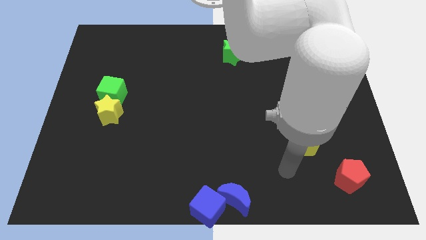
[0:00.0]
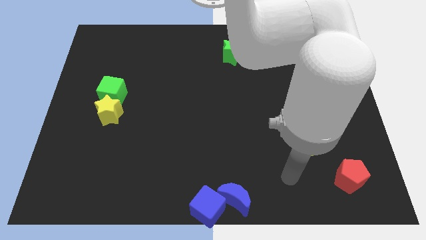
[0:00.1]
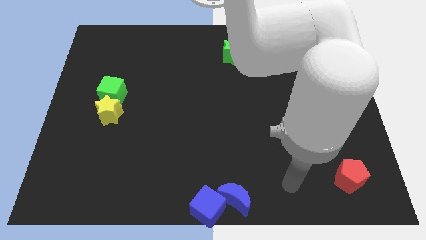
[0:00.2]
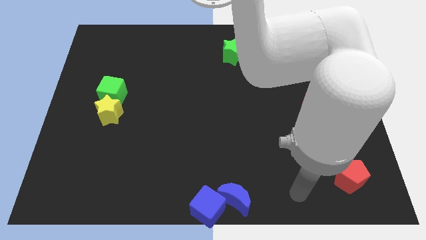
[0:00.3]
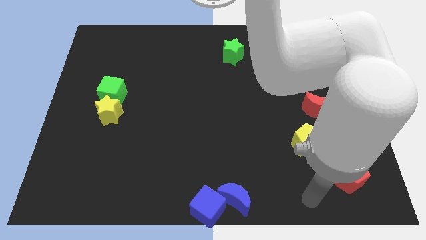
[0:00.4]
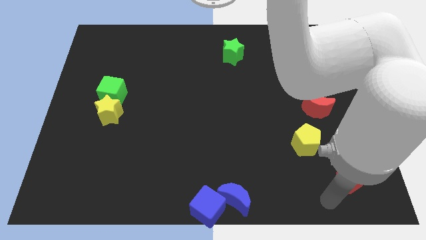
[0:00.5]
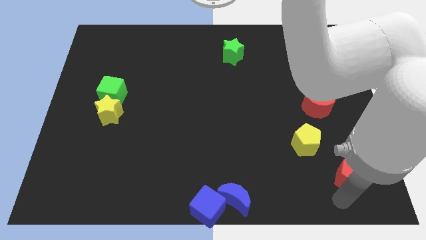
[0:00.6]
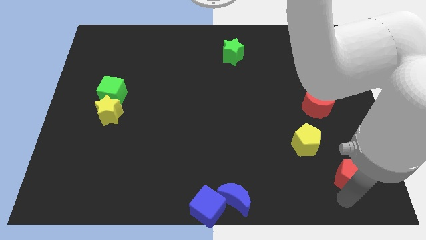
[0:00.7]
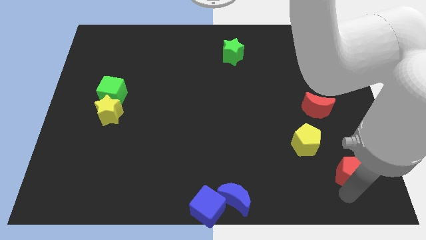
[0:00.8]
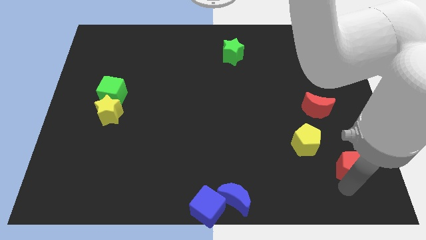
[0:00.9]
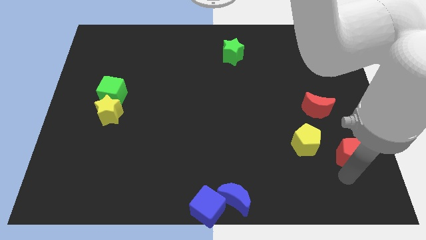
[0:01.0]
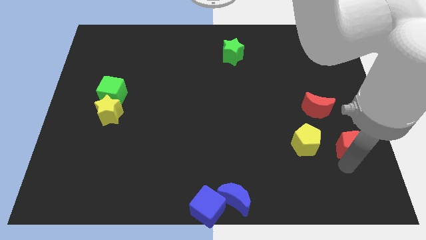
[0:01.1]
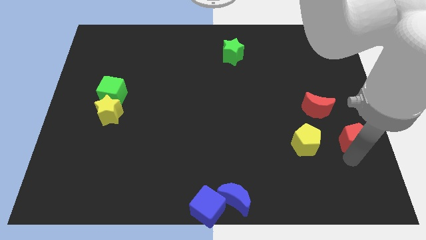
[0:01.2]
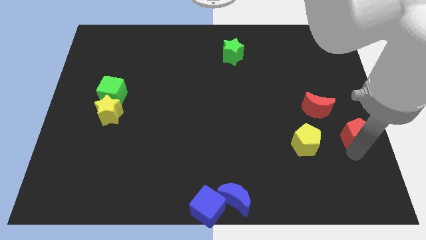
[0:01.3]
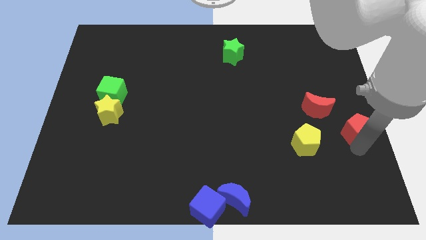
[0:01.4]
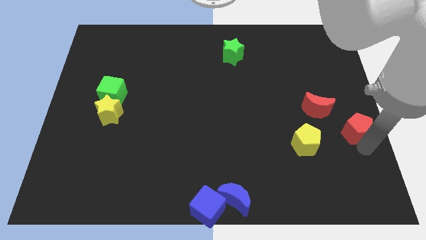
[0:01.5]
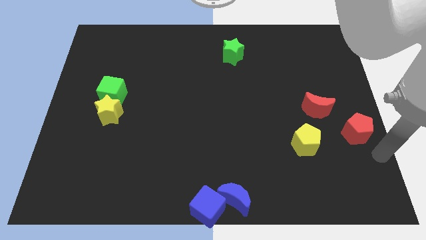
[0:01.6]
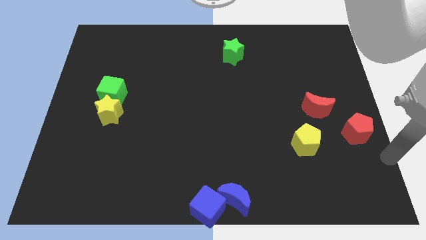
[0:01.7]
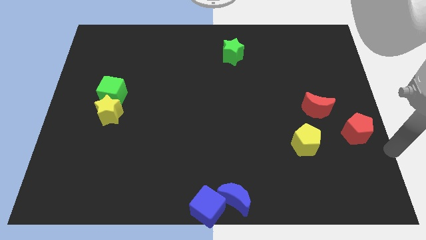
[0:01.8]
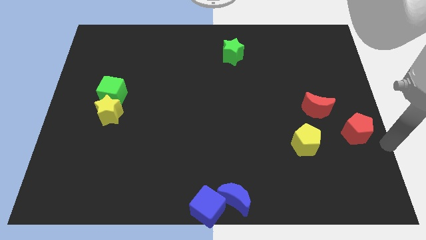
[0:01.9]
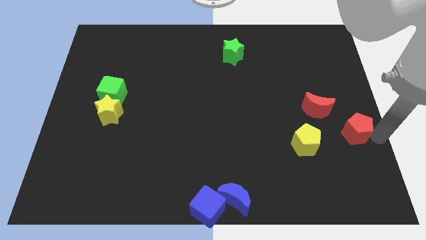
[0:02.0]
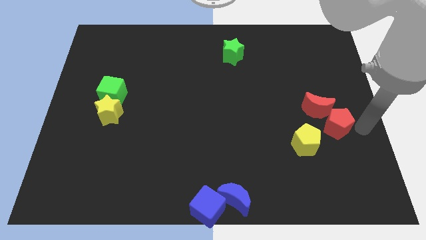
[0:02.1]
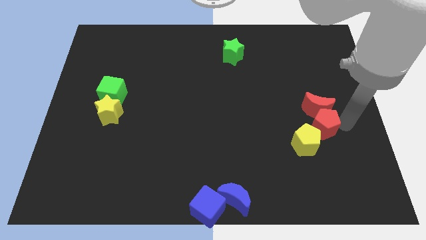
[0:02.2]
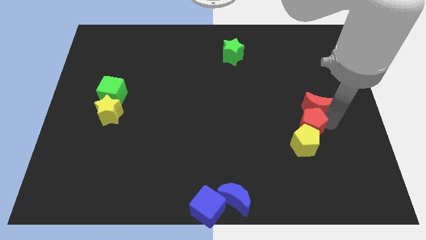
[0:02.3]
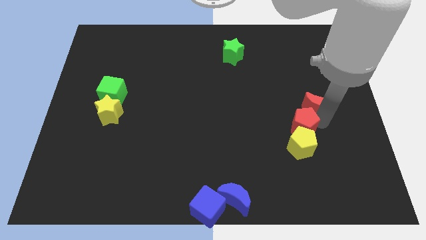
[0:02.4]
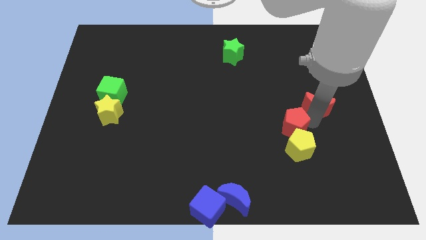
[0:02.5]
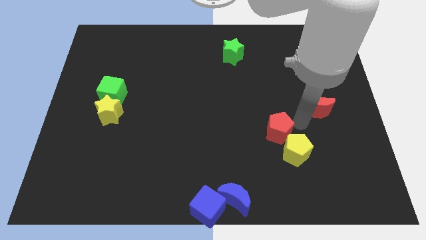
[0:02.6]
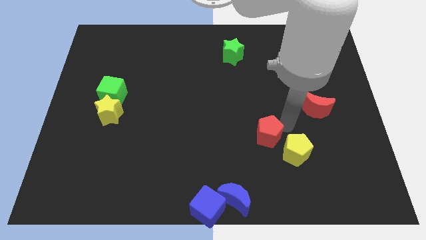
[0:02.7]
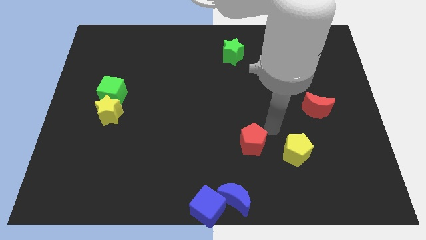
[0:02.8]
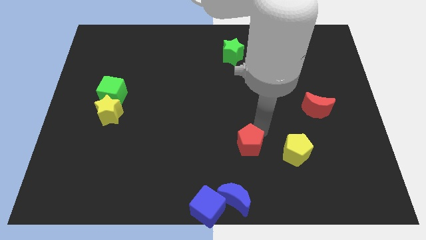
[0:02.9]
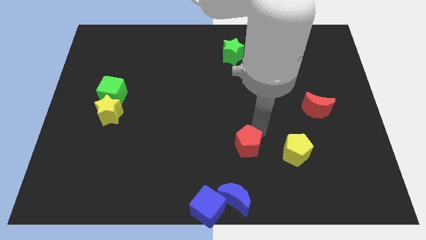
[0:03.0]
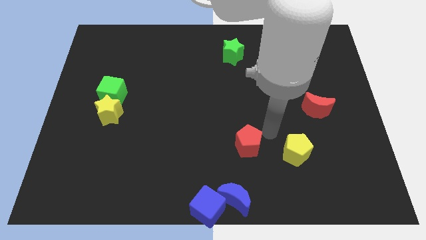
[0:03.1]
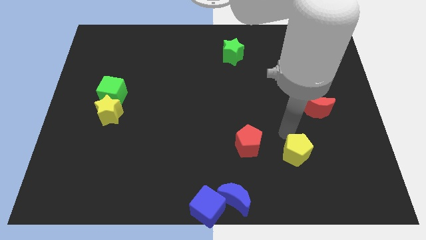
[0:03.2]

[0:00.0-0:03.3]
move the red pentagon to the left of the yellow pentagon

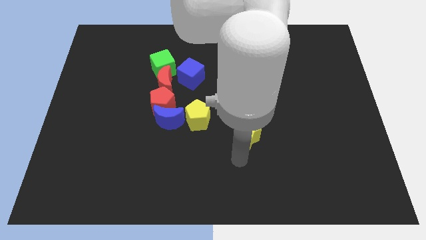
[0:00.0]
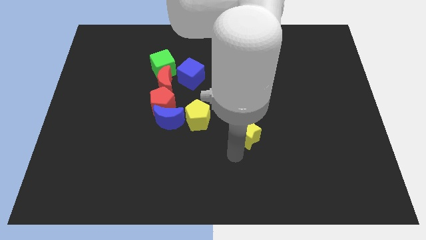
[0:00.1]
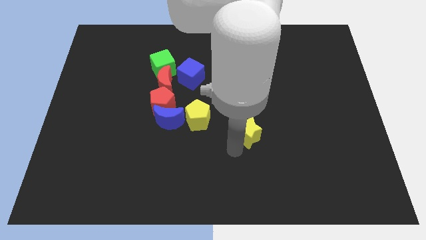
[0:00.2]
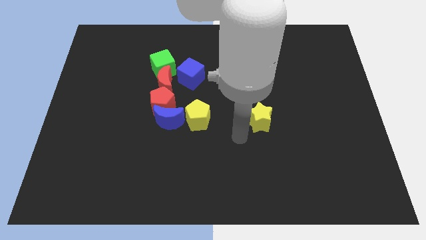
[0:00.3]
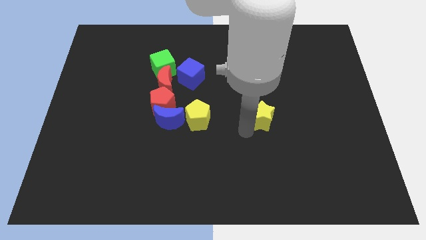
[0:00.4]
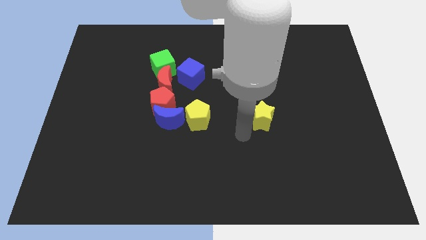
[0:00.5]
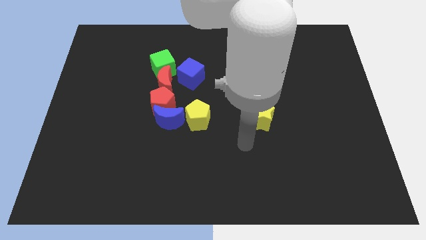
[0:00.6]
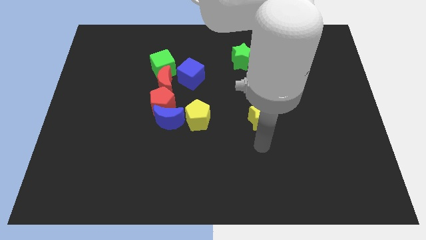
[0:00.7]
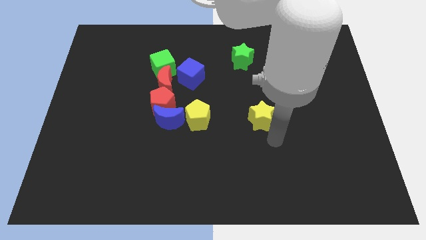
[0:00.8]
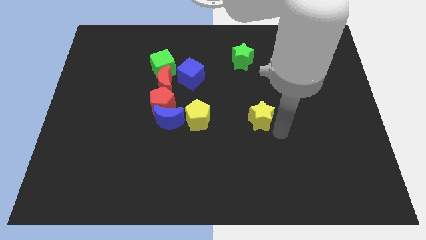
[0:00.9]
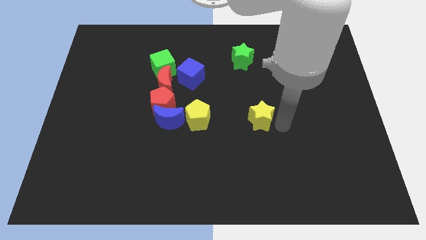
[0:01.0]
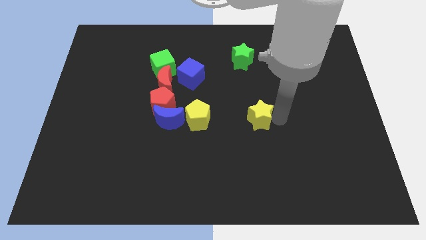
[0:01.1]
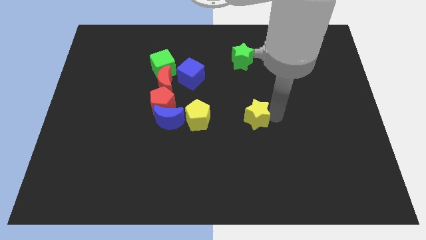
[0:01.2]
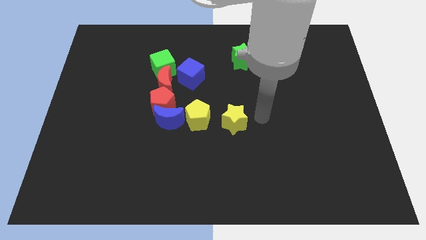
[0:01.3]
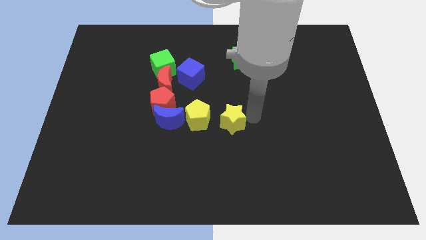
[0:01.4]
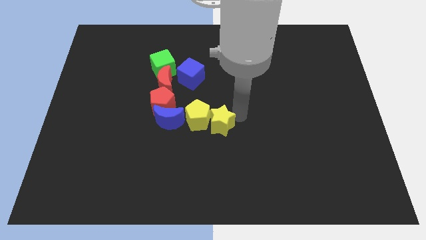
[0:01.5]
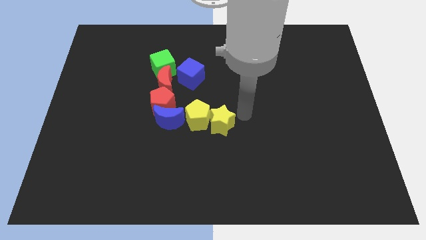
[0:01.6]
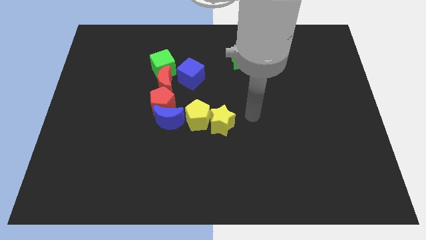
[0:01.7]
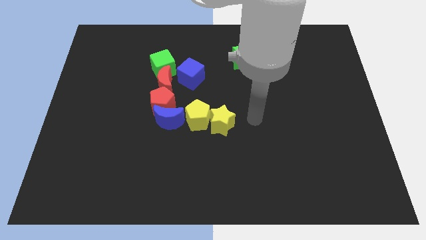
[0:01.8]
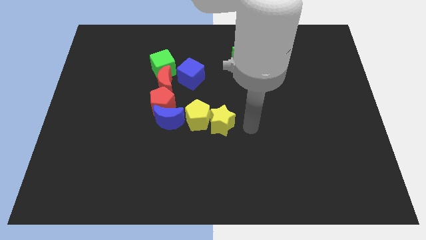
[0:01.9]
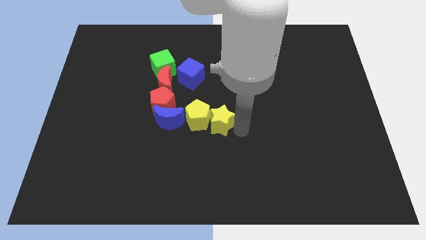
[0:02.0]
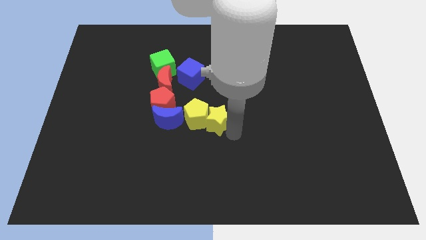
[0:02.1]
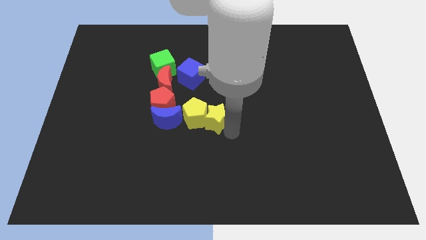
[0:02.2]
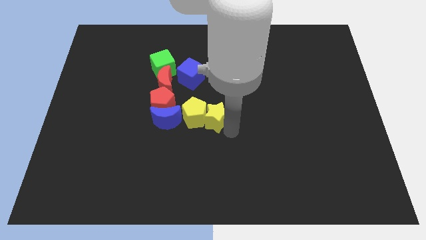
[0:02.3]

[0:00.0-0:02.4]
put yellow blocks together

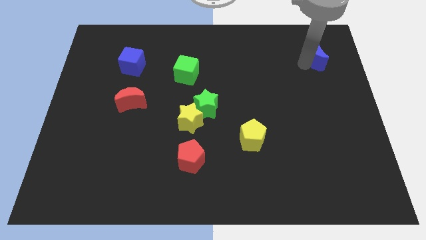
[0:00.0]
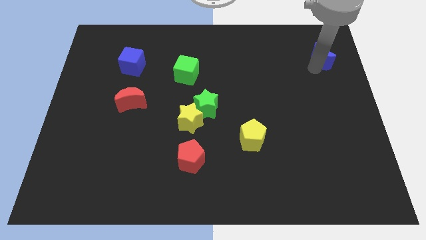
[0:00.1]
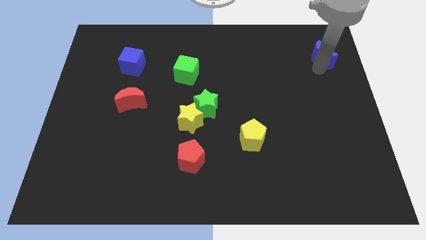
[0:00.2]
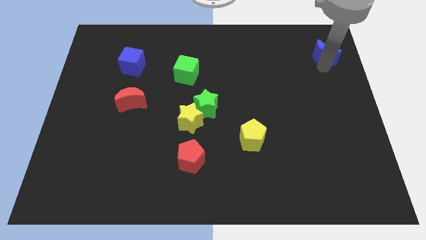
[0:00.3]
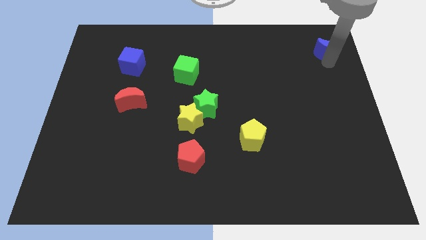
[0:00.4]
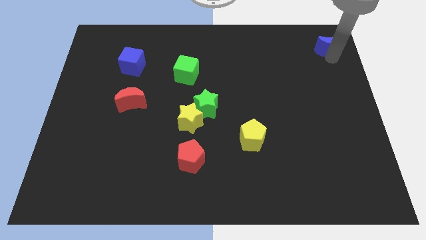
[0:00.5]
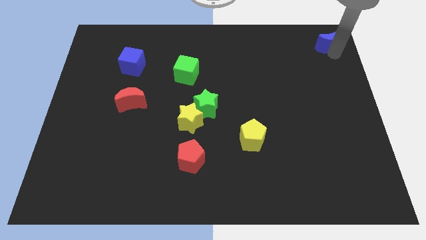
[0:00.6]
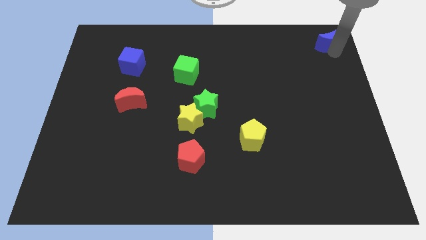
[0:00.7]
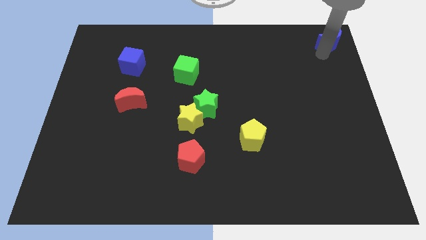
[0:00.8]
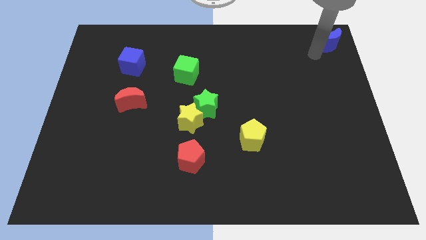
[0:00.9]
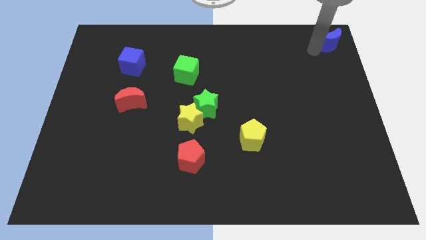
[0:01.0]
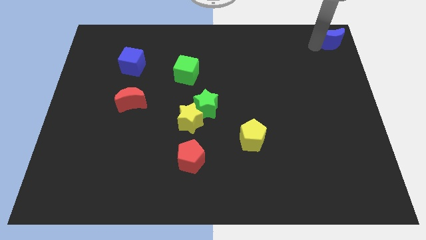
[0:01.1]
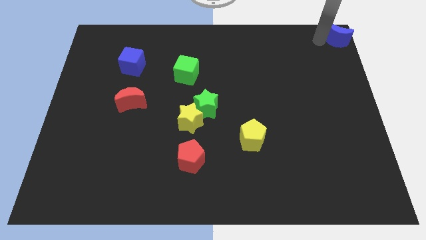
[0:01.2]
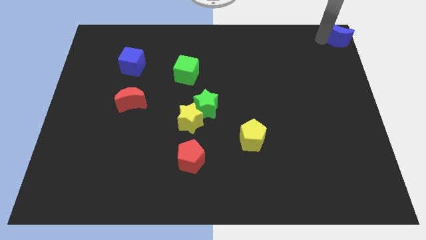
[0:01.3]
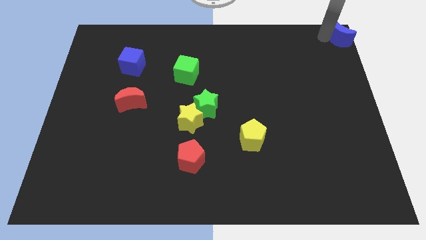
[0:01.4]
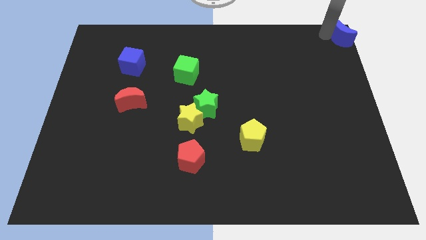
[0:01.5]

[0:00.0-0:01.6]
push the blue moon to the bottom right

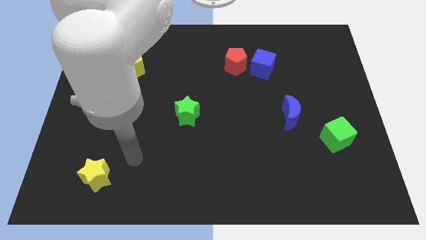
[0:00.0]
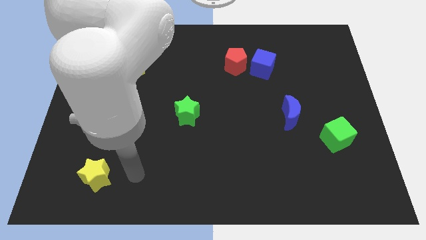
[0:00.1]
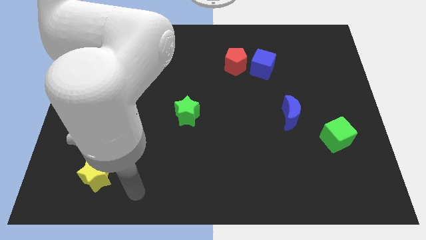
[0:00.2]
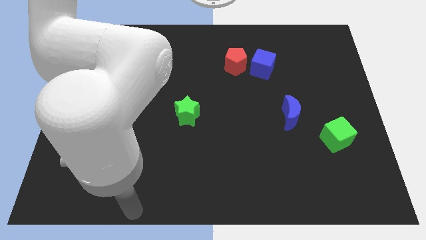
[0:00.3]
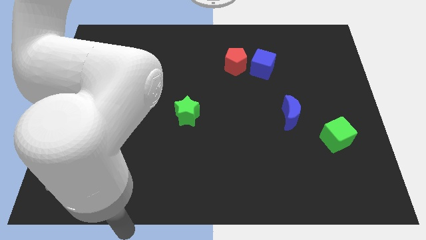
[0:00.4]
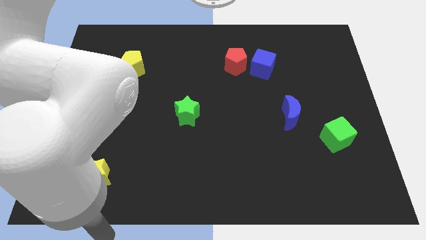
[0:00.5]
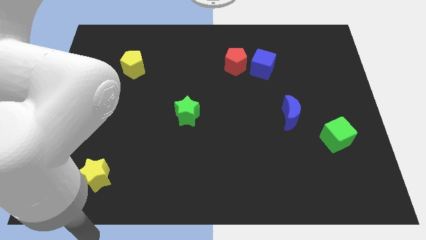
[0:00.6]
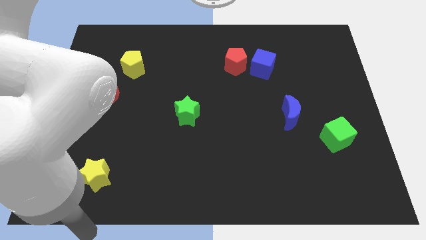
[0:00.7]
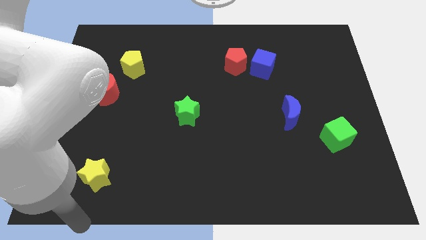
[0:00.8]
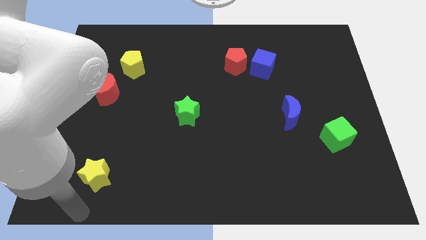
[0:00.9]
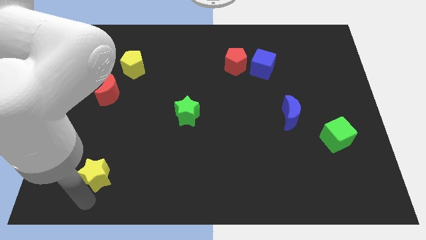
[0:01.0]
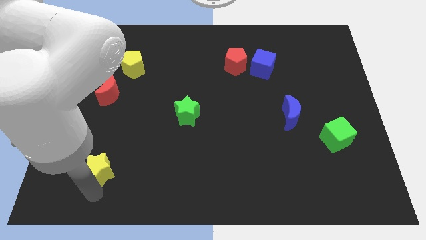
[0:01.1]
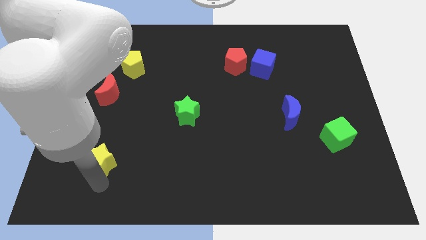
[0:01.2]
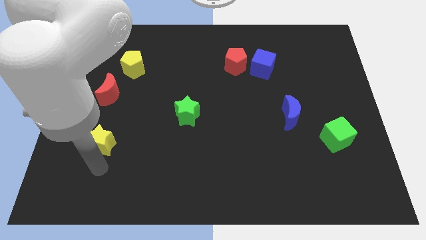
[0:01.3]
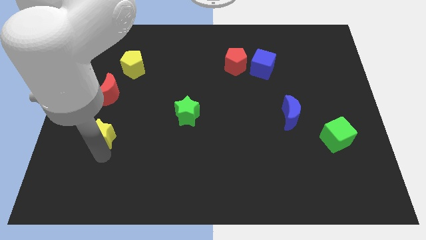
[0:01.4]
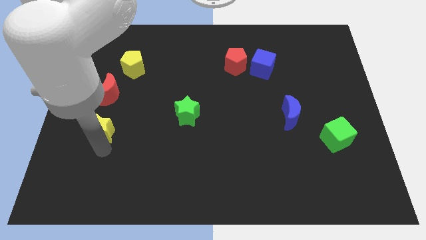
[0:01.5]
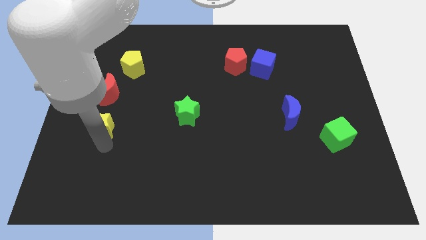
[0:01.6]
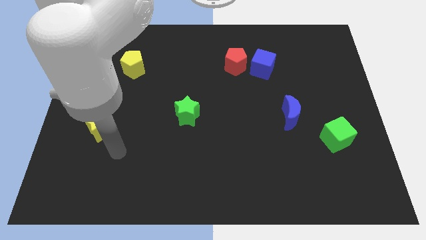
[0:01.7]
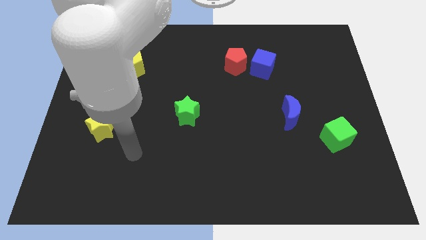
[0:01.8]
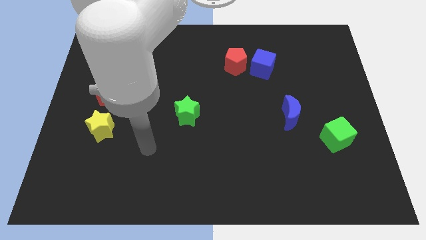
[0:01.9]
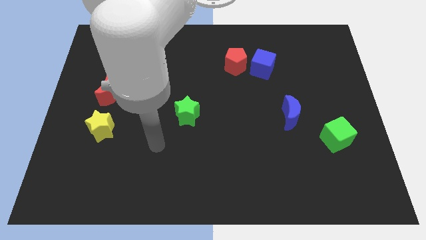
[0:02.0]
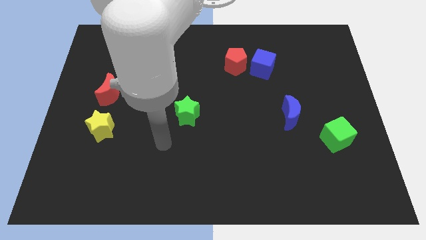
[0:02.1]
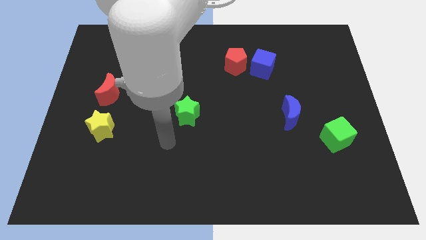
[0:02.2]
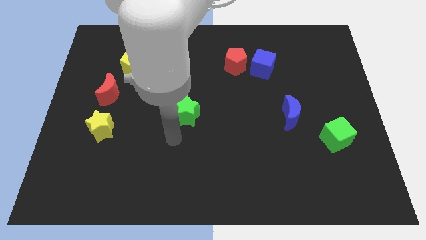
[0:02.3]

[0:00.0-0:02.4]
move yellow star to the bottom of red moon
